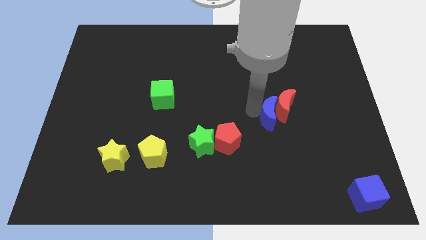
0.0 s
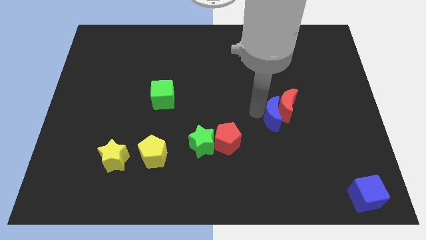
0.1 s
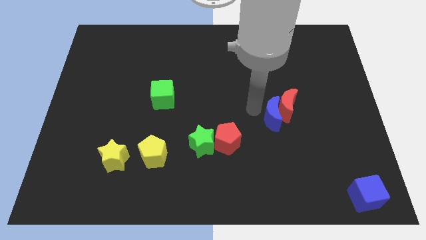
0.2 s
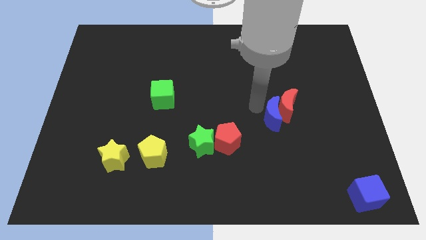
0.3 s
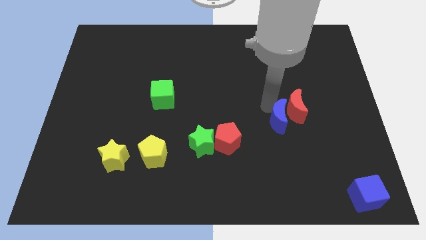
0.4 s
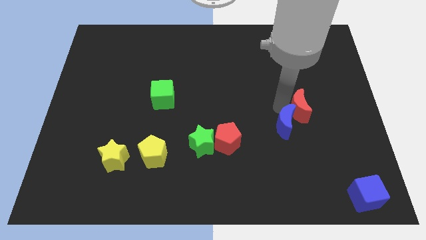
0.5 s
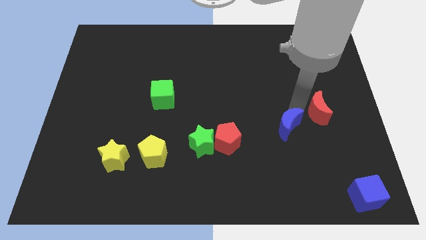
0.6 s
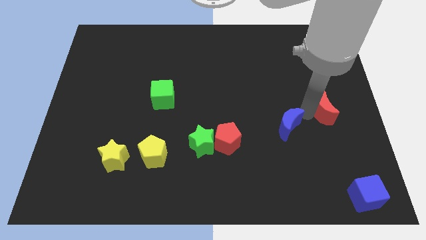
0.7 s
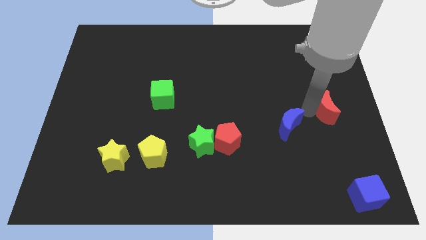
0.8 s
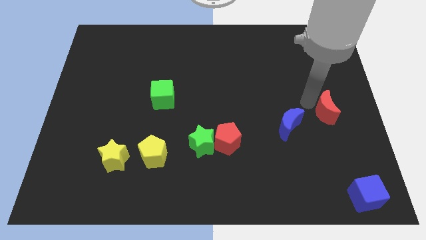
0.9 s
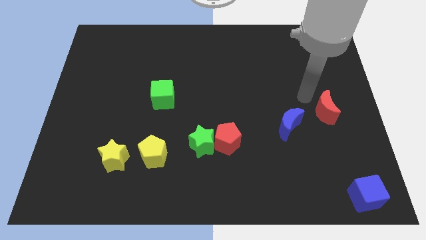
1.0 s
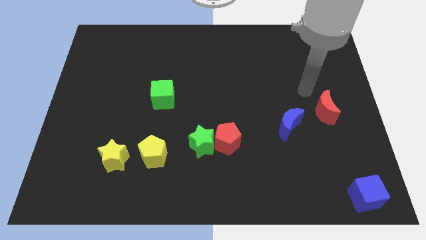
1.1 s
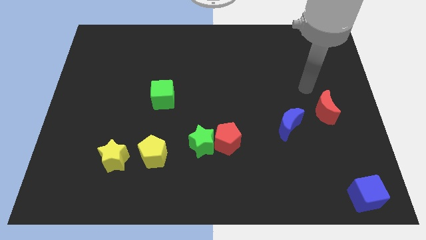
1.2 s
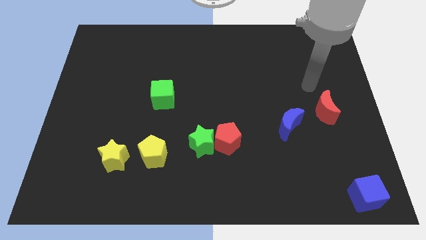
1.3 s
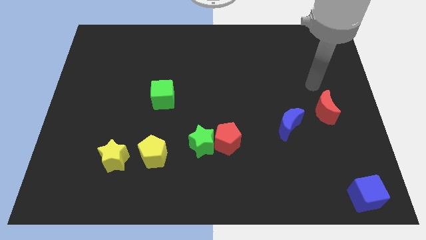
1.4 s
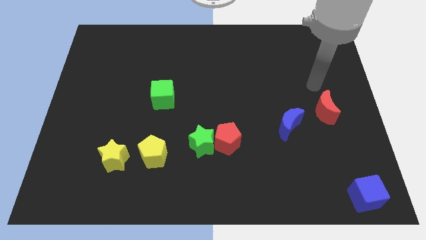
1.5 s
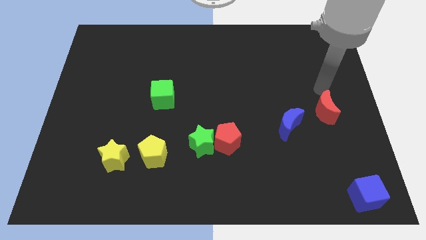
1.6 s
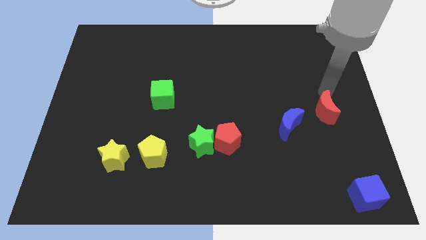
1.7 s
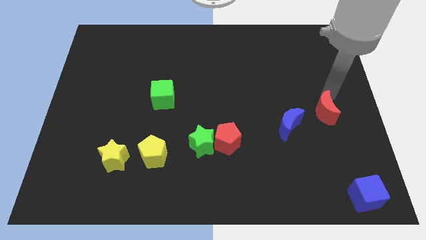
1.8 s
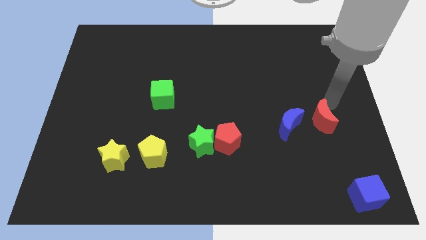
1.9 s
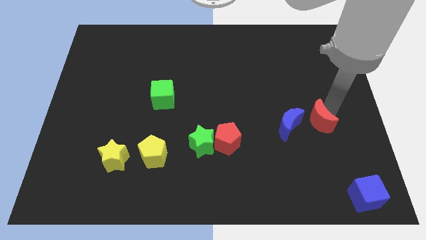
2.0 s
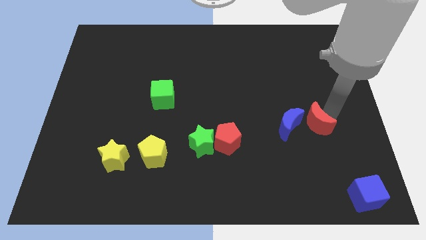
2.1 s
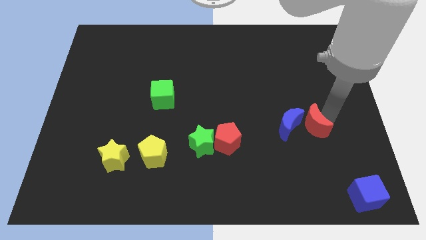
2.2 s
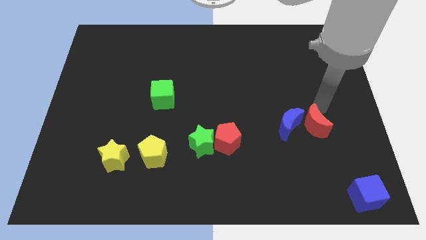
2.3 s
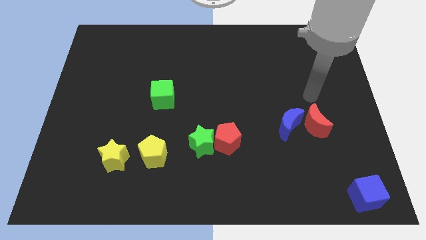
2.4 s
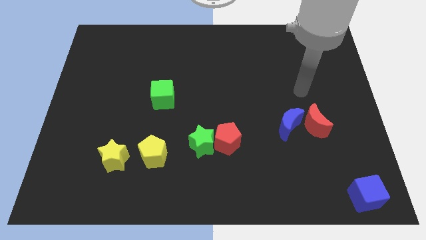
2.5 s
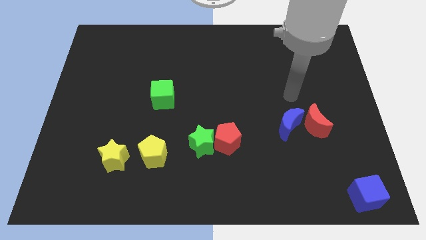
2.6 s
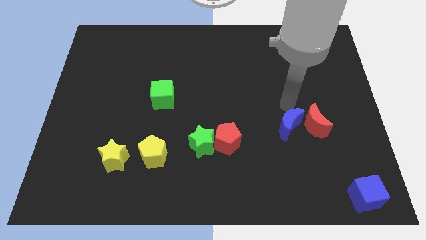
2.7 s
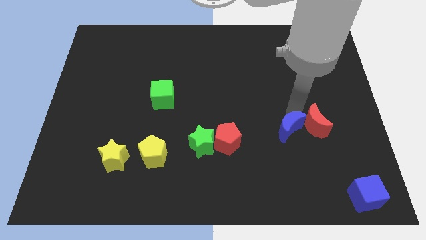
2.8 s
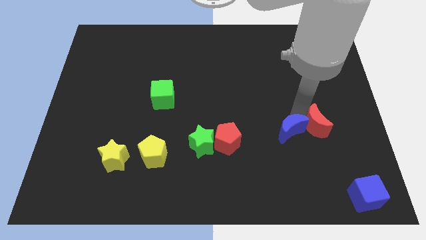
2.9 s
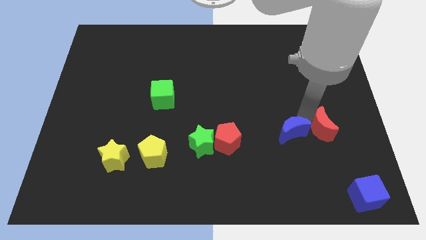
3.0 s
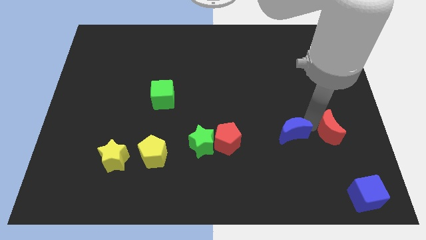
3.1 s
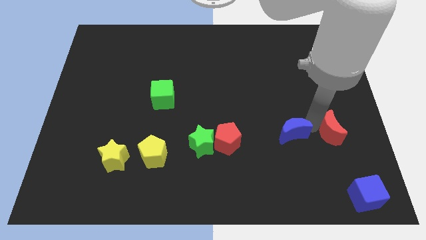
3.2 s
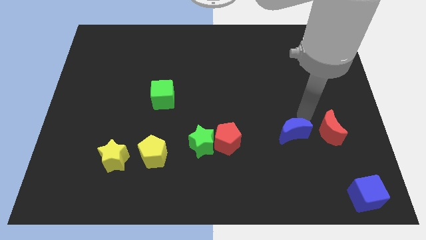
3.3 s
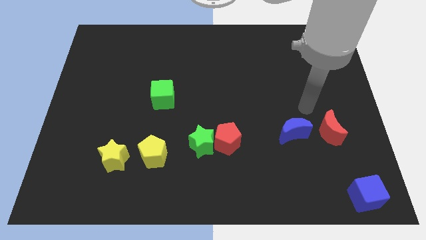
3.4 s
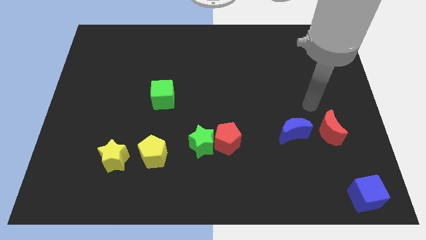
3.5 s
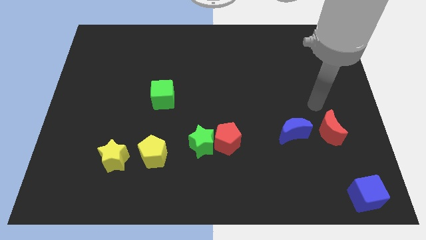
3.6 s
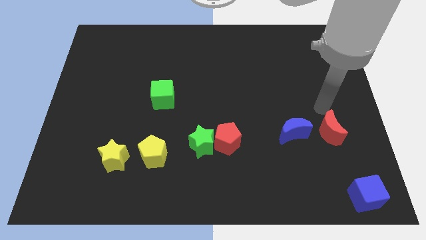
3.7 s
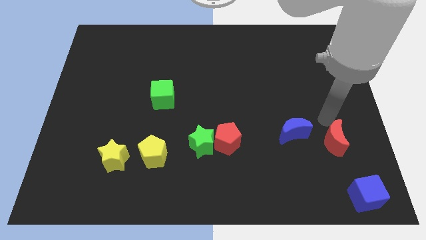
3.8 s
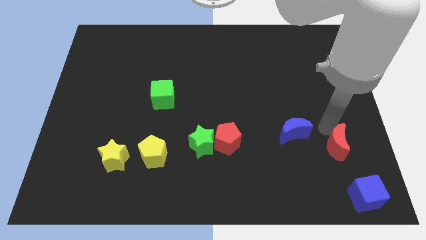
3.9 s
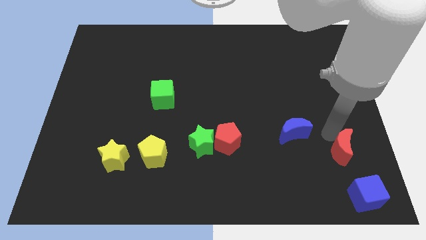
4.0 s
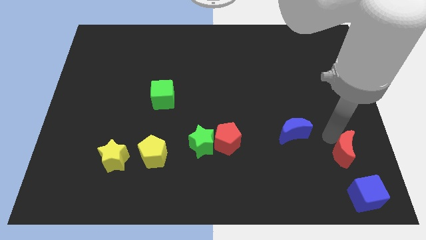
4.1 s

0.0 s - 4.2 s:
slide the red moon diagonally bottom right to the blue moon

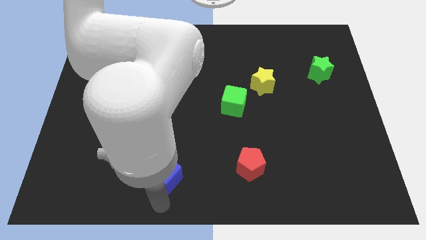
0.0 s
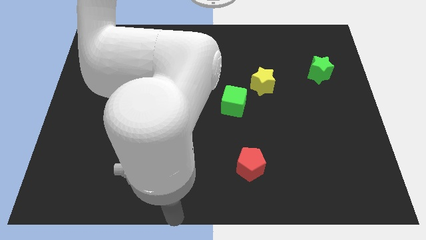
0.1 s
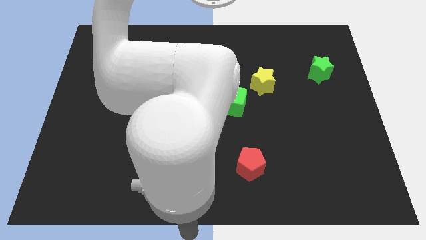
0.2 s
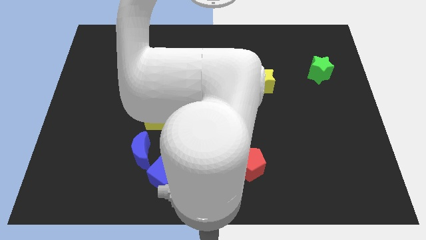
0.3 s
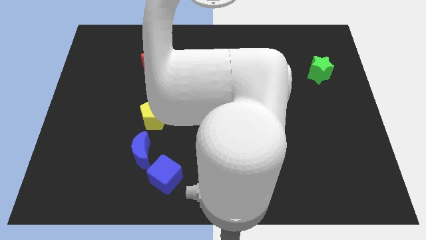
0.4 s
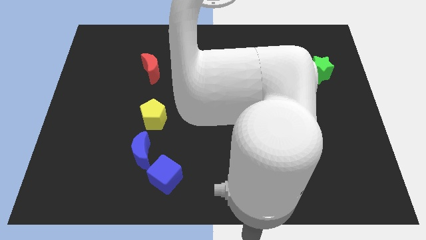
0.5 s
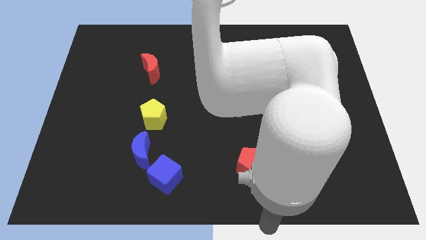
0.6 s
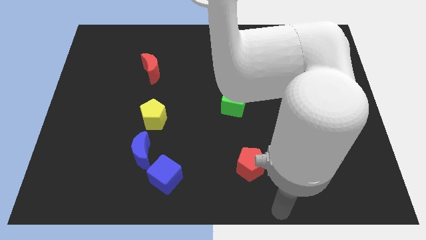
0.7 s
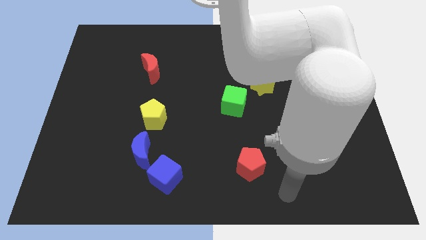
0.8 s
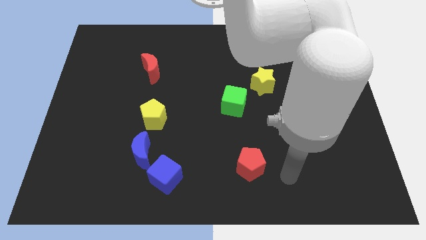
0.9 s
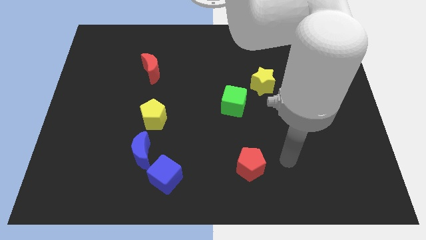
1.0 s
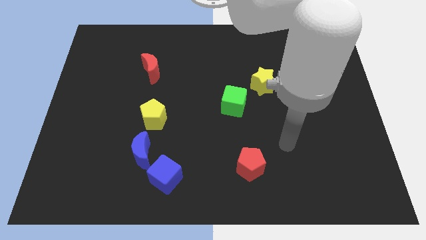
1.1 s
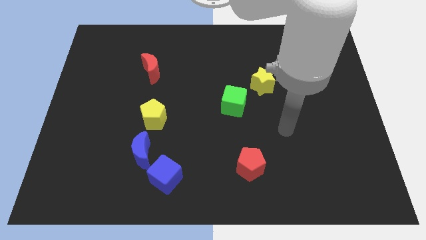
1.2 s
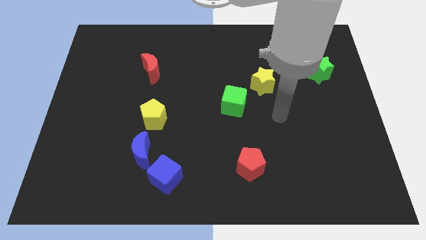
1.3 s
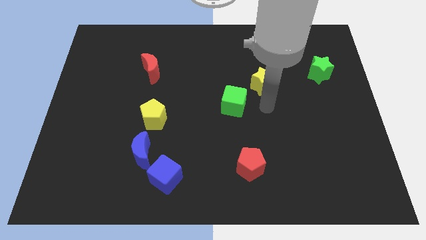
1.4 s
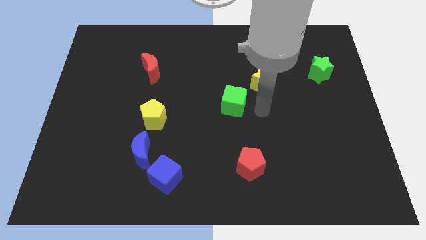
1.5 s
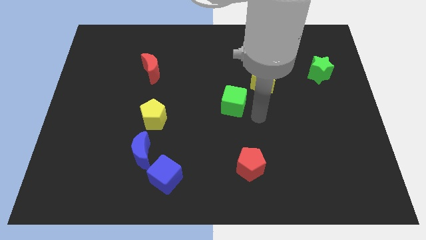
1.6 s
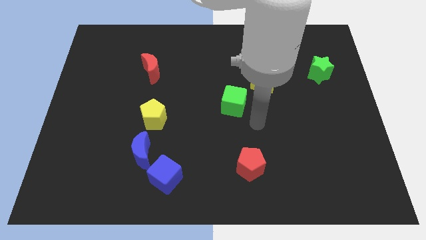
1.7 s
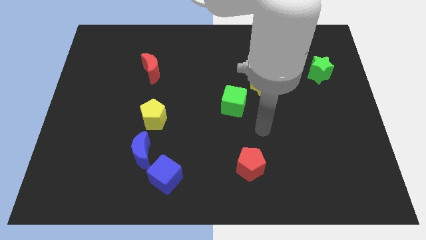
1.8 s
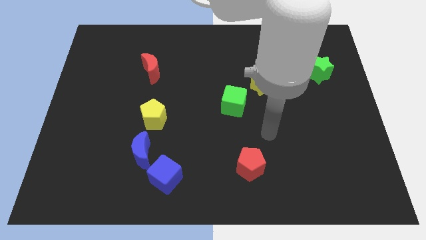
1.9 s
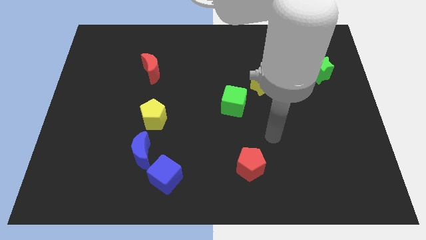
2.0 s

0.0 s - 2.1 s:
go away from the blue cube

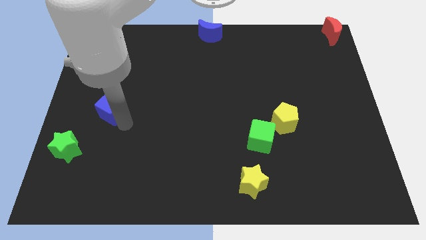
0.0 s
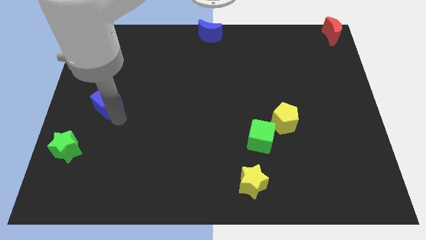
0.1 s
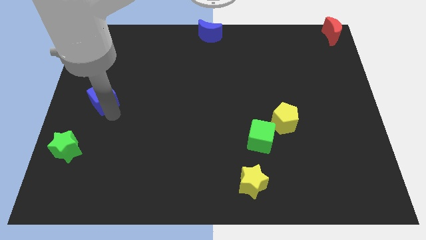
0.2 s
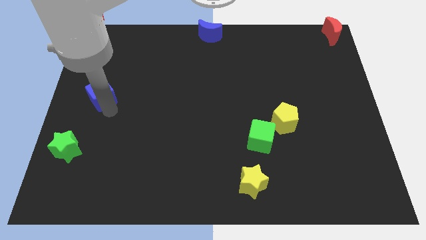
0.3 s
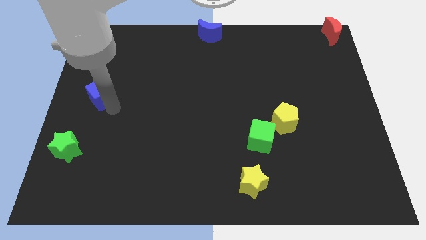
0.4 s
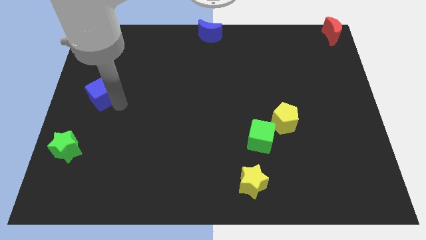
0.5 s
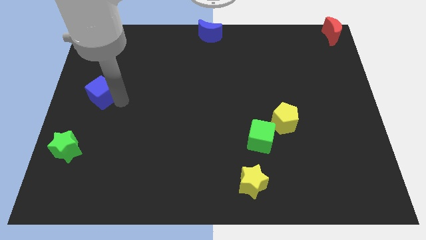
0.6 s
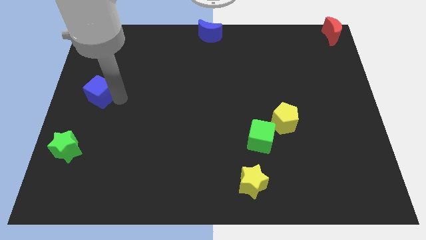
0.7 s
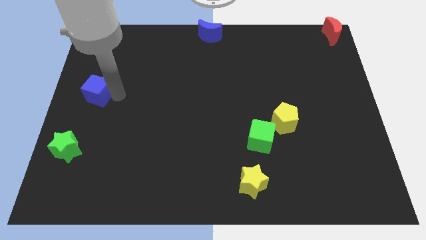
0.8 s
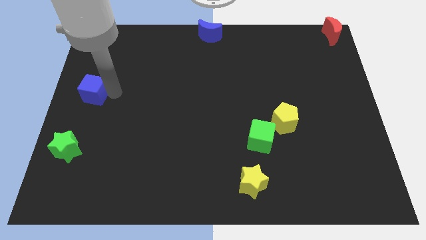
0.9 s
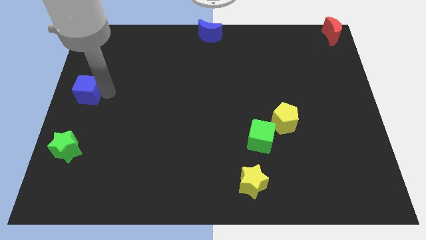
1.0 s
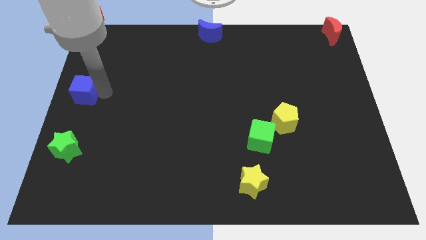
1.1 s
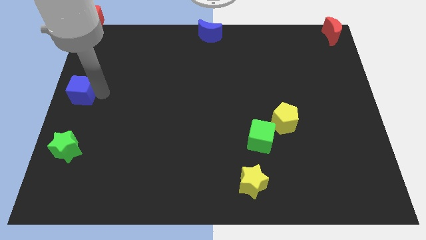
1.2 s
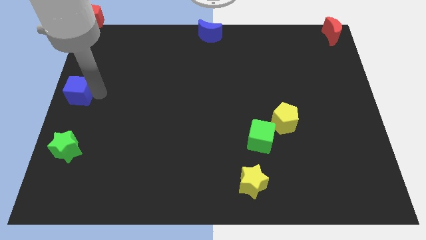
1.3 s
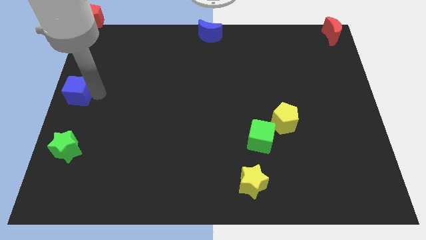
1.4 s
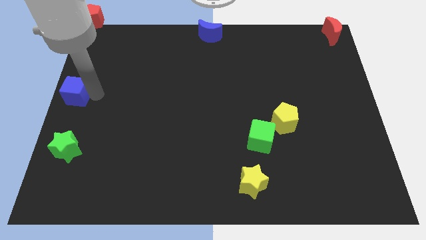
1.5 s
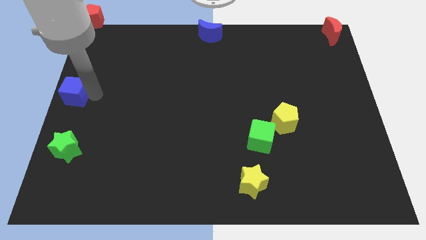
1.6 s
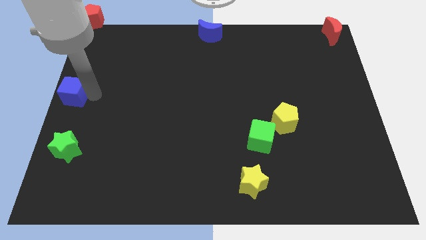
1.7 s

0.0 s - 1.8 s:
put blue cube vertically above the green star

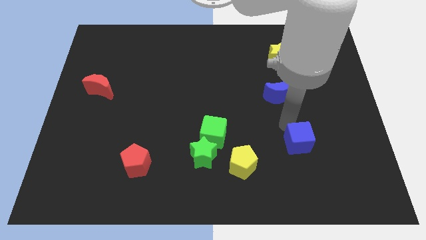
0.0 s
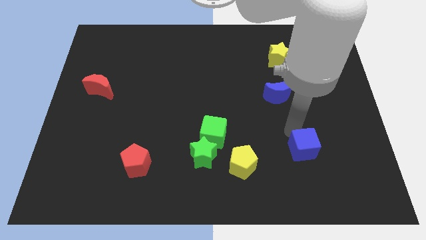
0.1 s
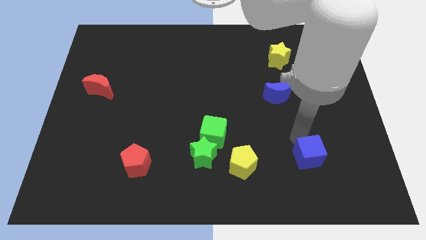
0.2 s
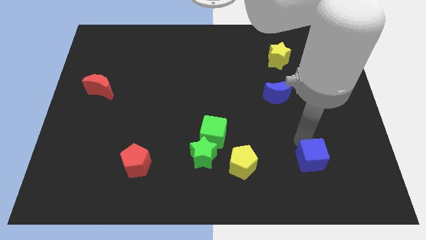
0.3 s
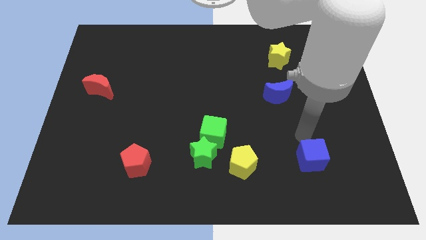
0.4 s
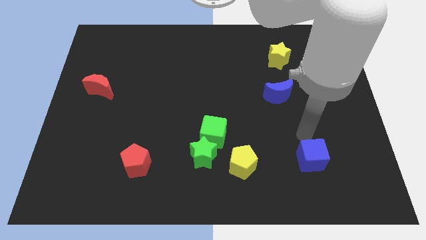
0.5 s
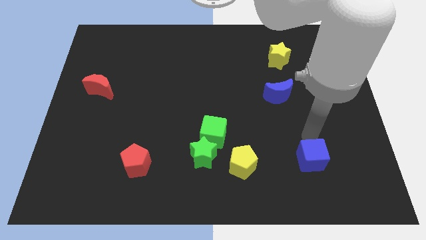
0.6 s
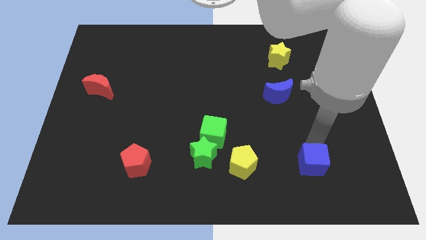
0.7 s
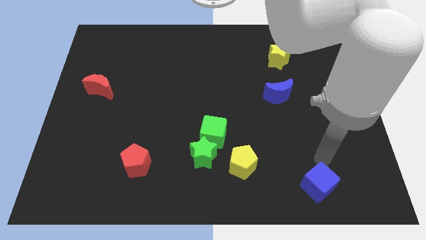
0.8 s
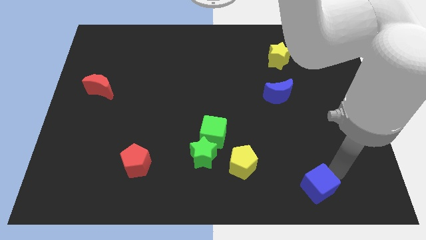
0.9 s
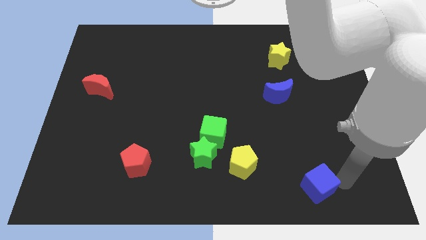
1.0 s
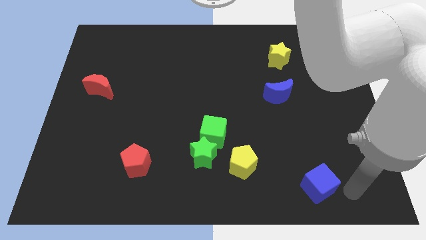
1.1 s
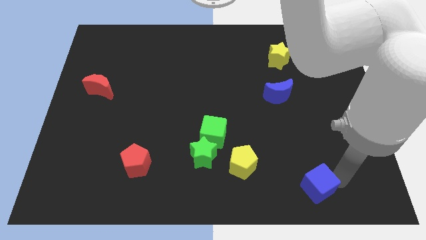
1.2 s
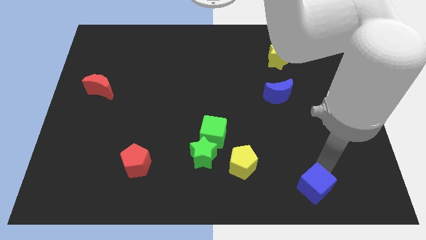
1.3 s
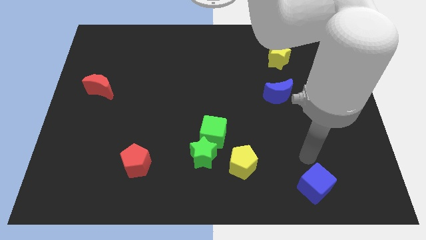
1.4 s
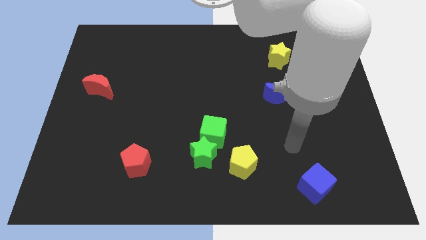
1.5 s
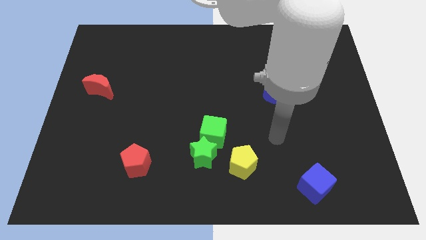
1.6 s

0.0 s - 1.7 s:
move the blue cube to the bottom center
